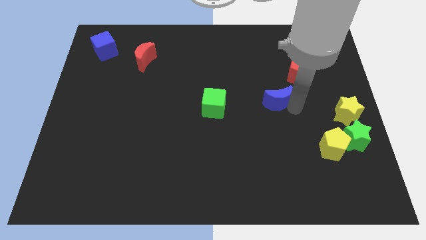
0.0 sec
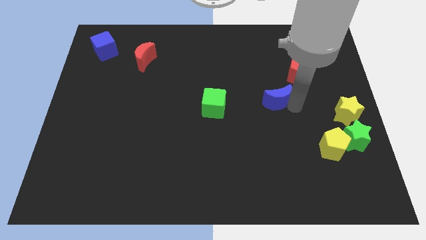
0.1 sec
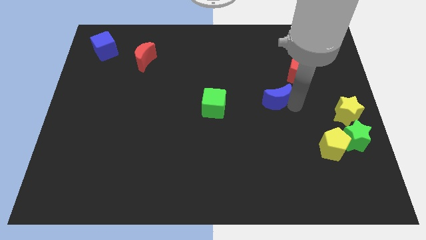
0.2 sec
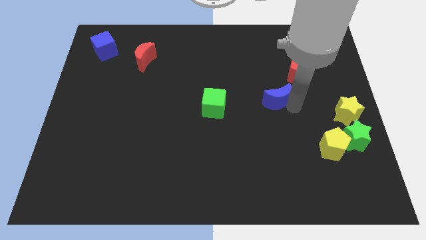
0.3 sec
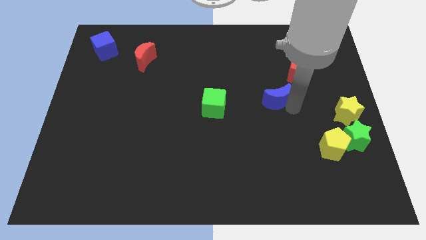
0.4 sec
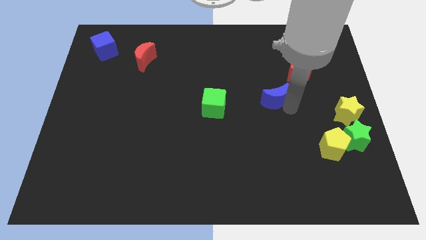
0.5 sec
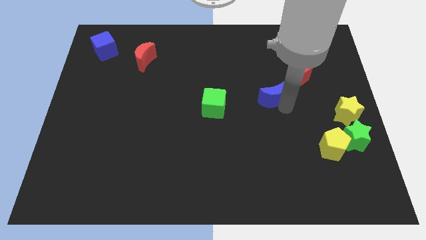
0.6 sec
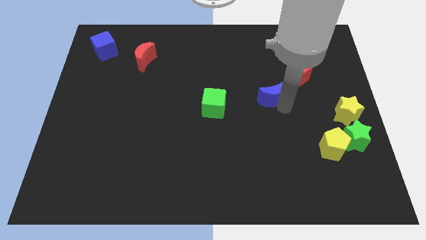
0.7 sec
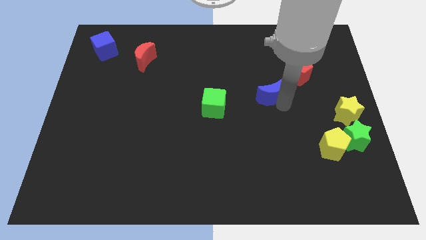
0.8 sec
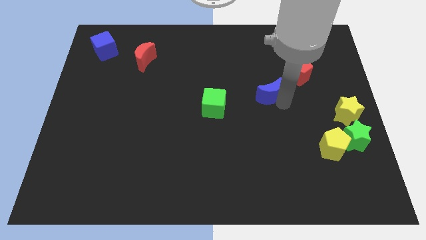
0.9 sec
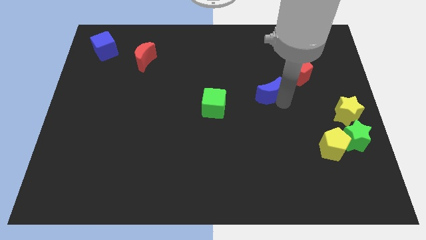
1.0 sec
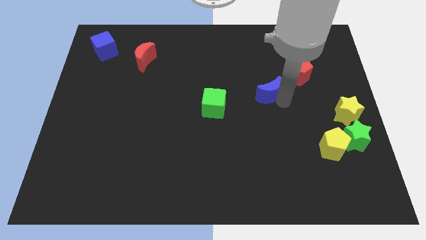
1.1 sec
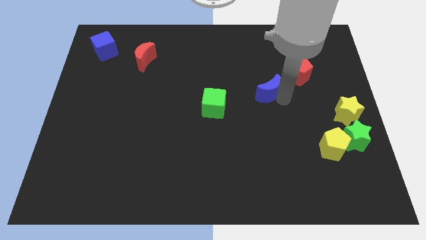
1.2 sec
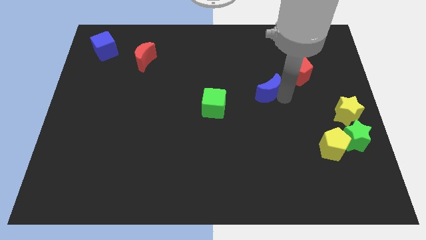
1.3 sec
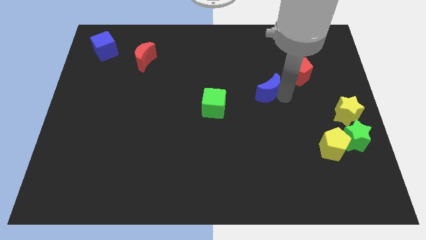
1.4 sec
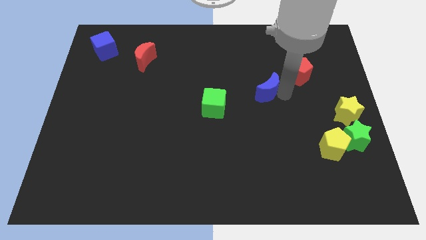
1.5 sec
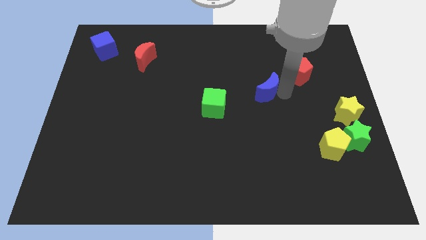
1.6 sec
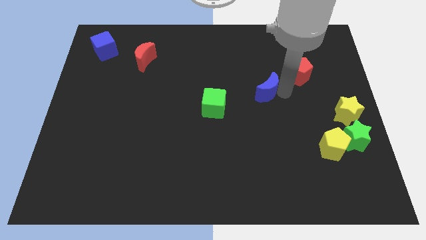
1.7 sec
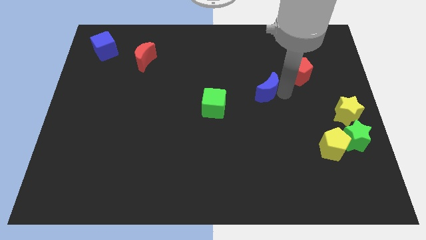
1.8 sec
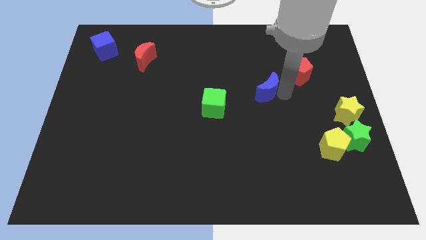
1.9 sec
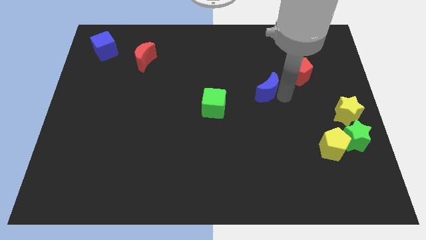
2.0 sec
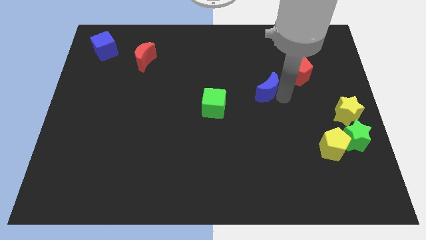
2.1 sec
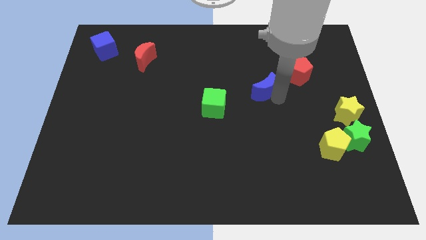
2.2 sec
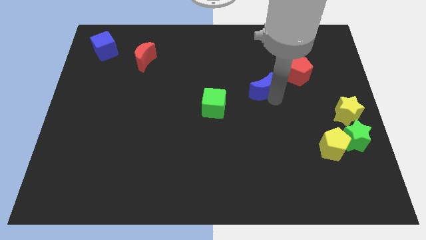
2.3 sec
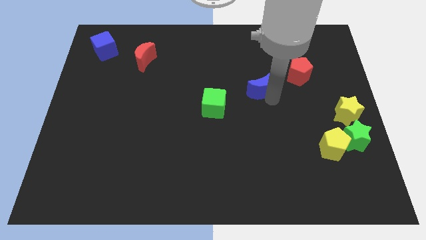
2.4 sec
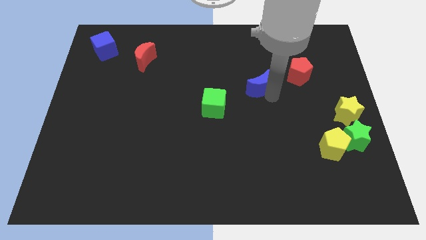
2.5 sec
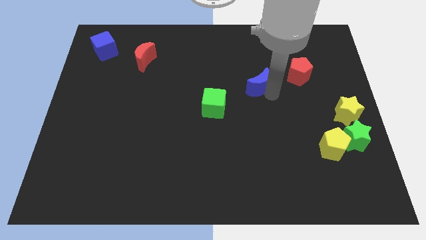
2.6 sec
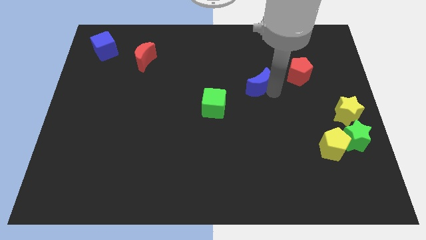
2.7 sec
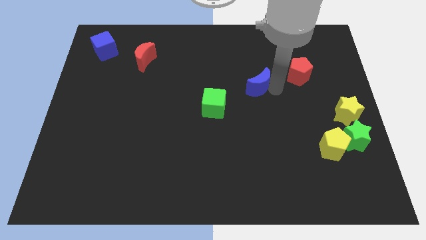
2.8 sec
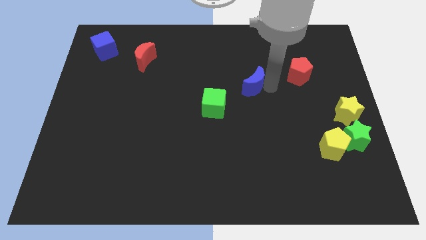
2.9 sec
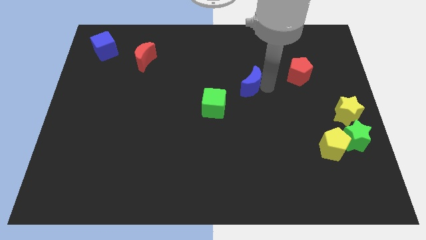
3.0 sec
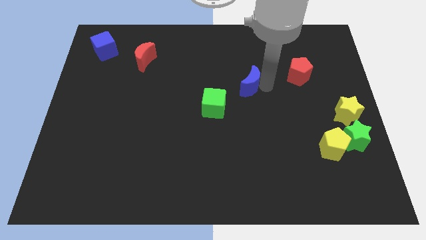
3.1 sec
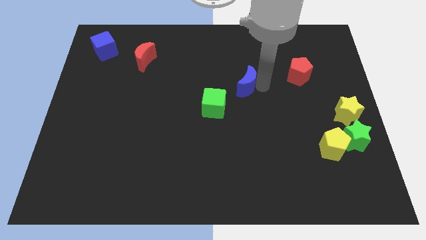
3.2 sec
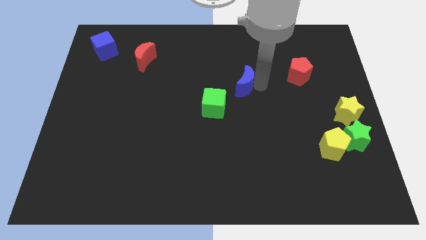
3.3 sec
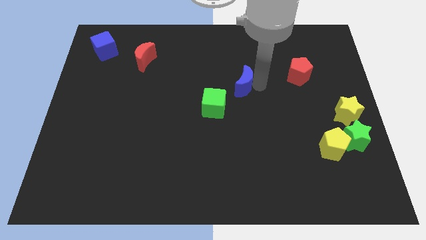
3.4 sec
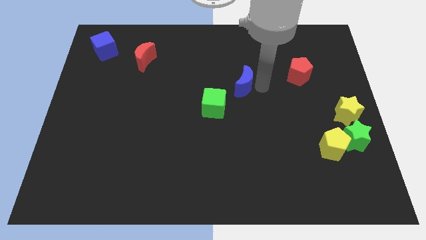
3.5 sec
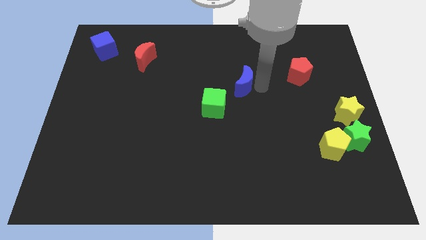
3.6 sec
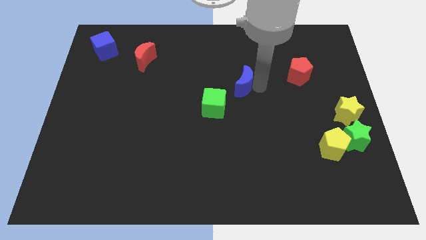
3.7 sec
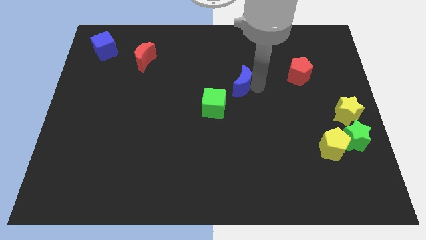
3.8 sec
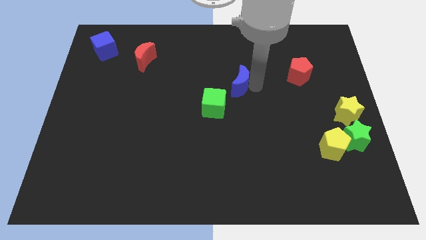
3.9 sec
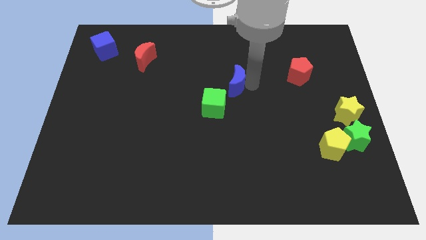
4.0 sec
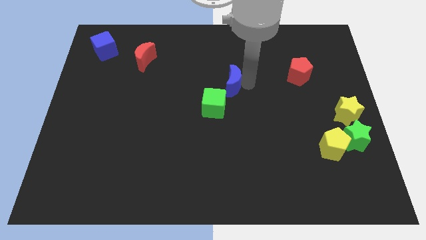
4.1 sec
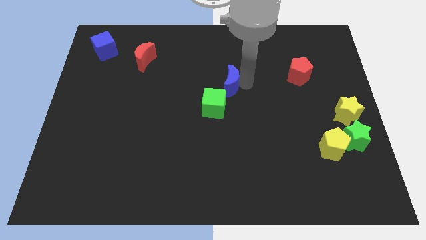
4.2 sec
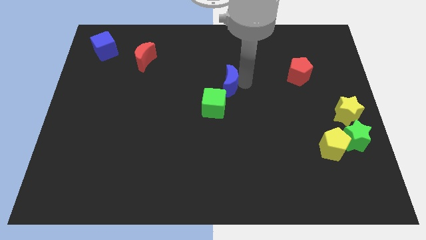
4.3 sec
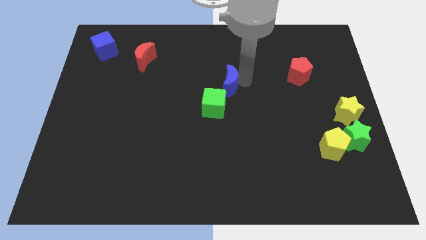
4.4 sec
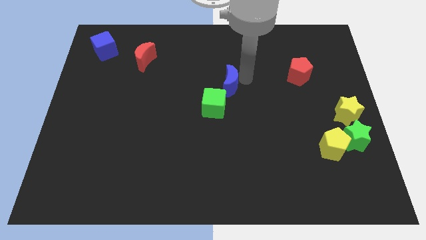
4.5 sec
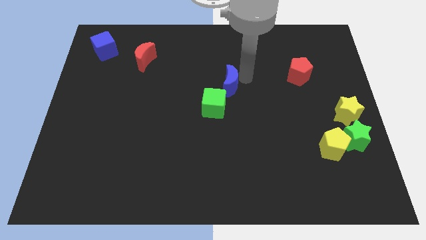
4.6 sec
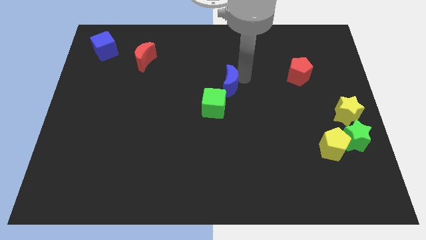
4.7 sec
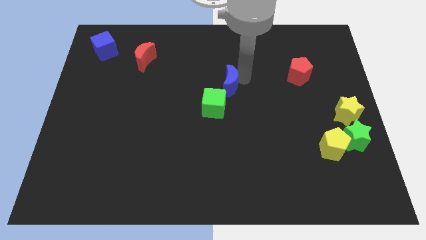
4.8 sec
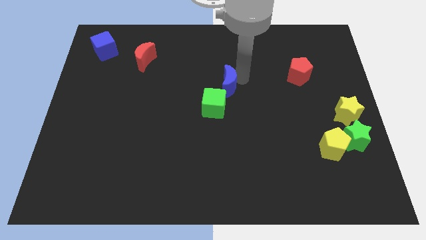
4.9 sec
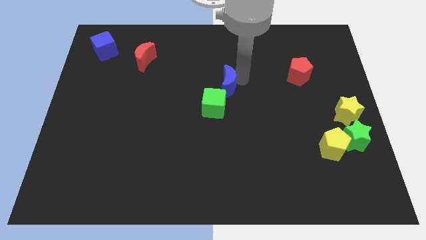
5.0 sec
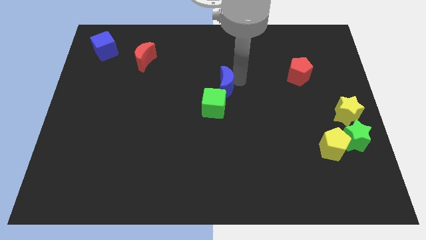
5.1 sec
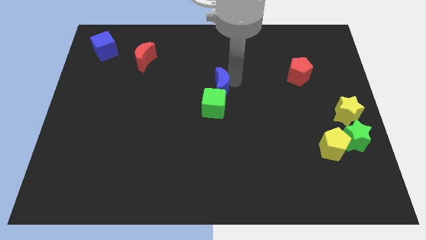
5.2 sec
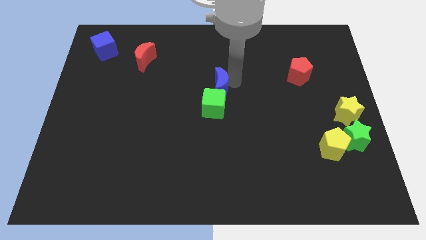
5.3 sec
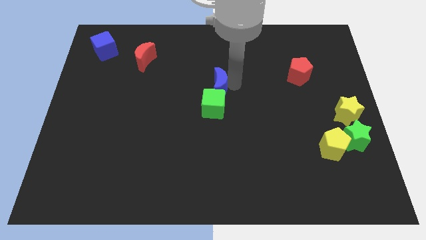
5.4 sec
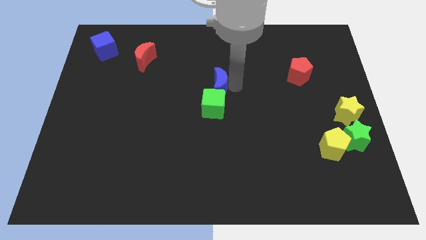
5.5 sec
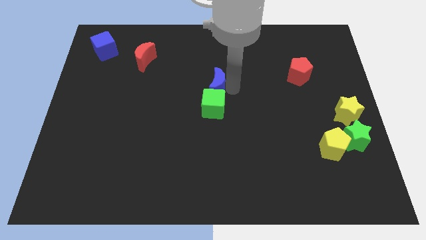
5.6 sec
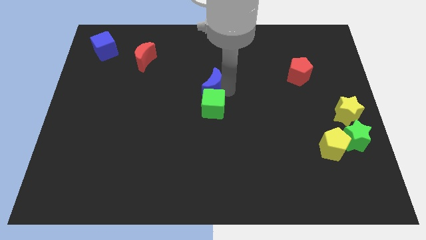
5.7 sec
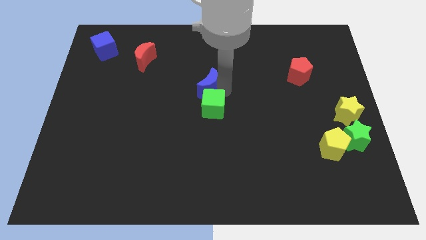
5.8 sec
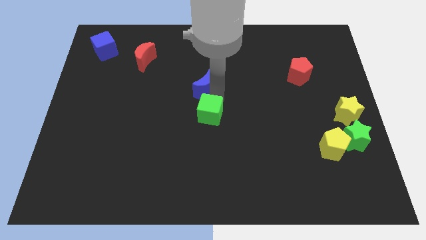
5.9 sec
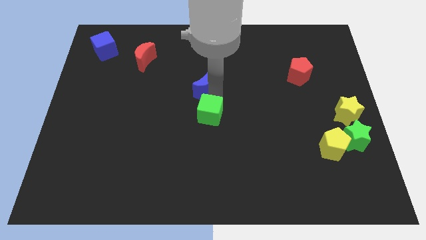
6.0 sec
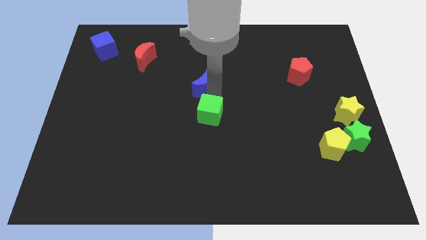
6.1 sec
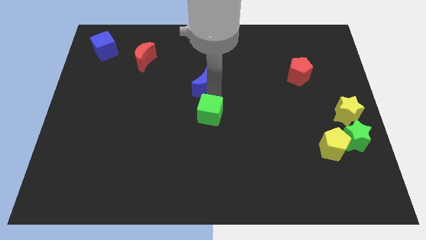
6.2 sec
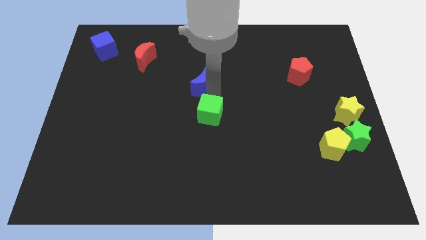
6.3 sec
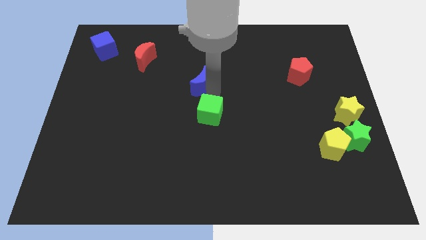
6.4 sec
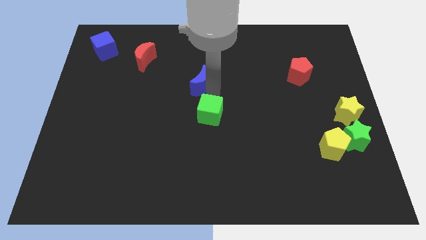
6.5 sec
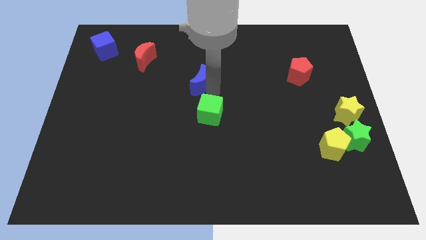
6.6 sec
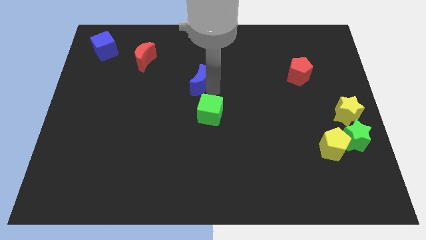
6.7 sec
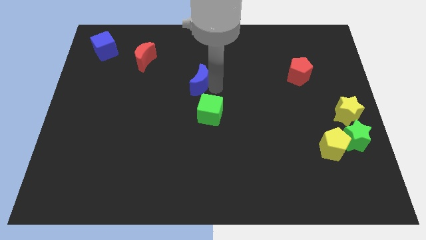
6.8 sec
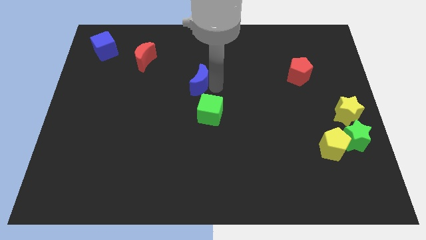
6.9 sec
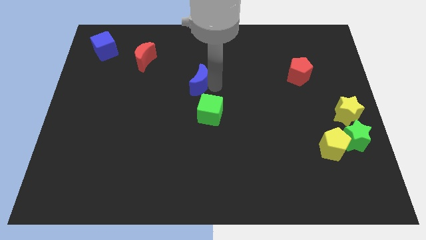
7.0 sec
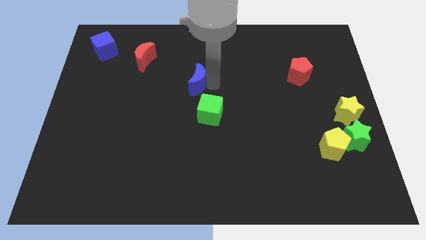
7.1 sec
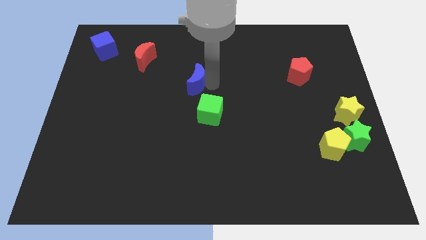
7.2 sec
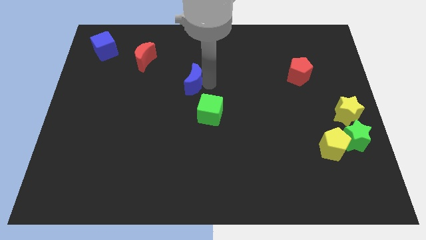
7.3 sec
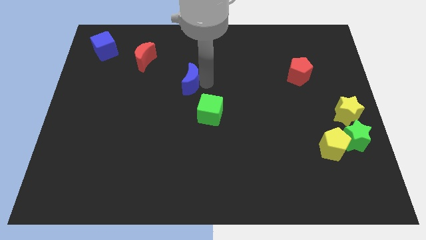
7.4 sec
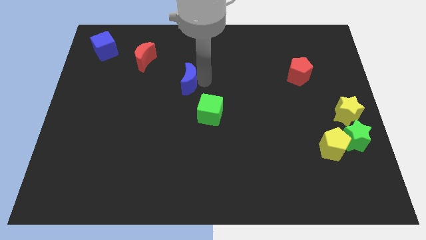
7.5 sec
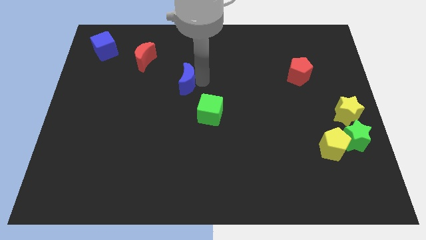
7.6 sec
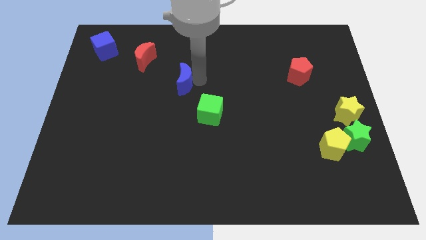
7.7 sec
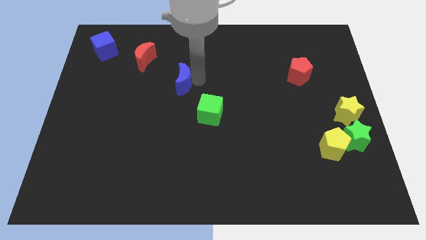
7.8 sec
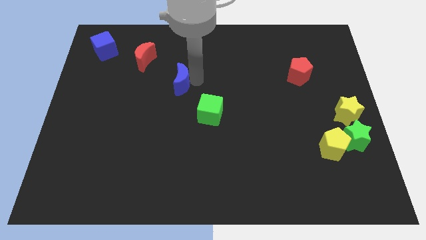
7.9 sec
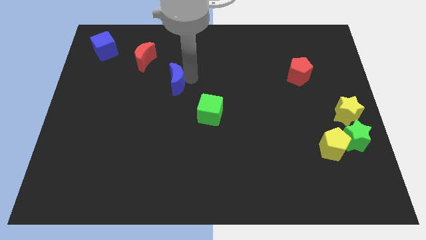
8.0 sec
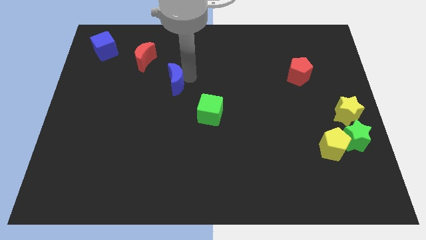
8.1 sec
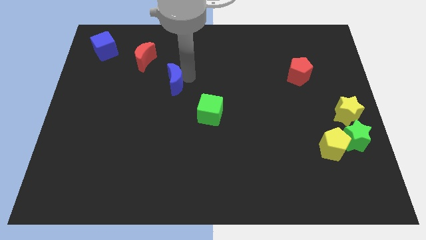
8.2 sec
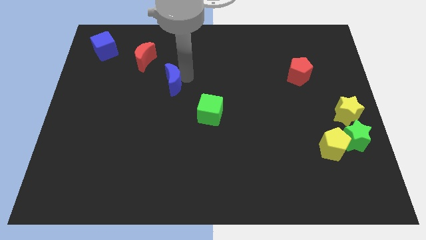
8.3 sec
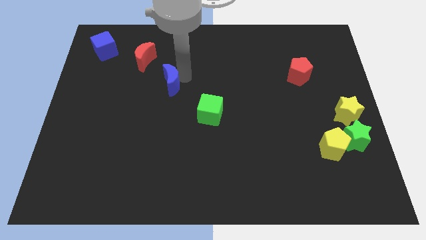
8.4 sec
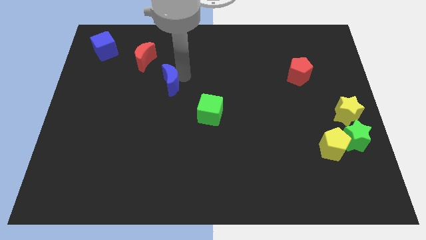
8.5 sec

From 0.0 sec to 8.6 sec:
place the blue moon in between the red moon and green cube

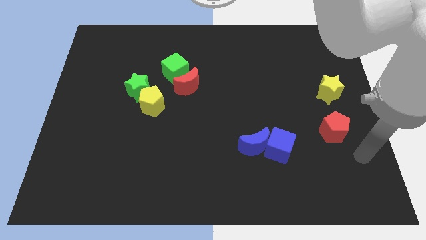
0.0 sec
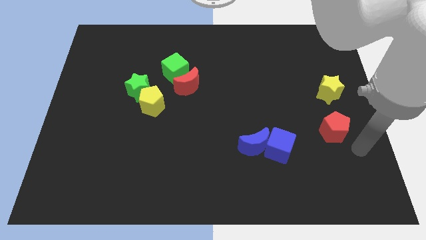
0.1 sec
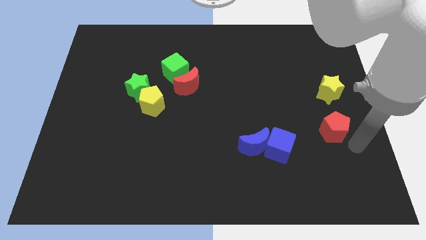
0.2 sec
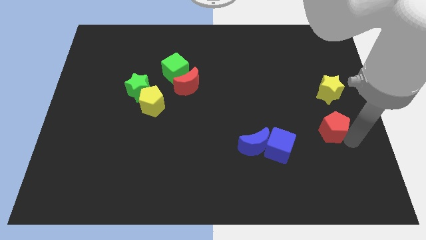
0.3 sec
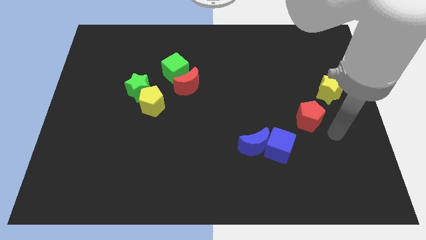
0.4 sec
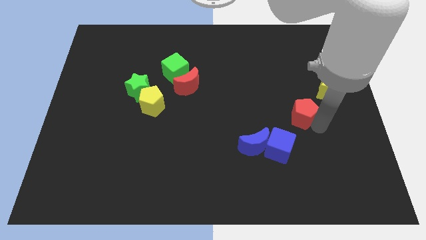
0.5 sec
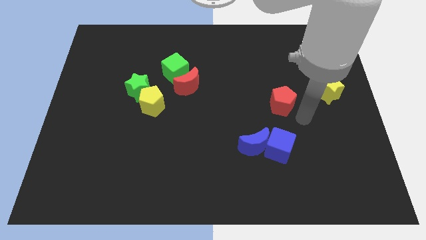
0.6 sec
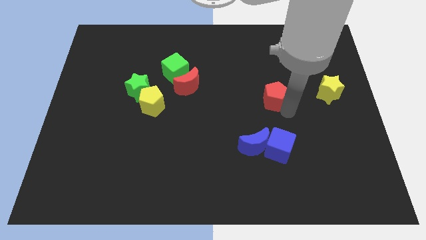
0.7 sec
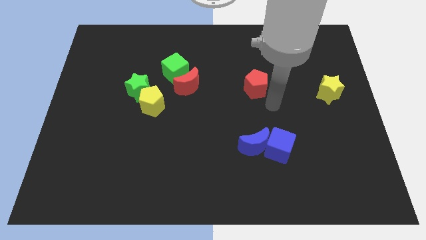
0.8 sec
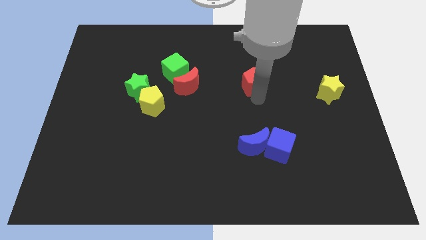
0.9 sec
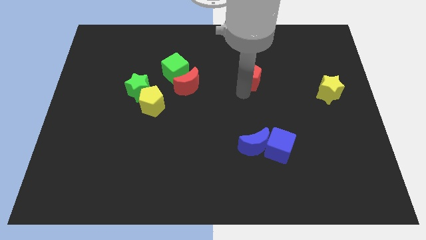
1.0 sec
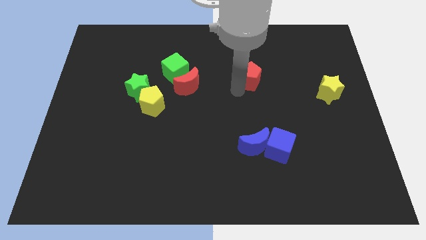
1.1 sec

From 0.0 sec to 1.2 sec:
push the red pentagon upwards diagonally
